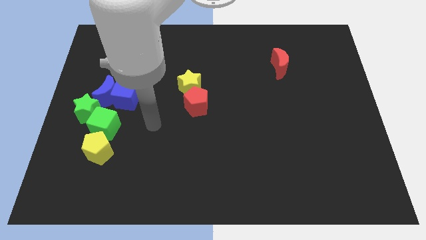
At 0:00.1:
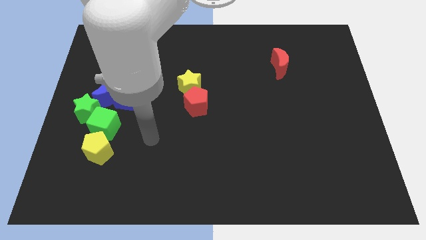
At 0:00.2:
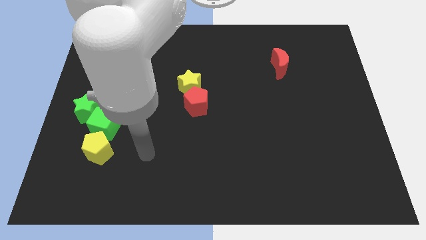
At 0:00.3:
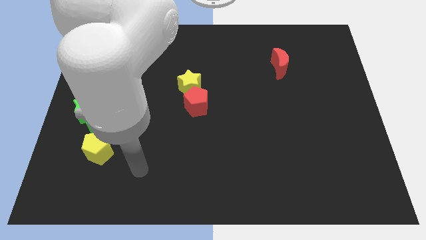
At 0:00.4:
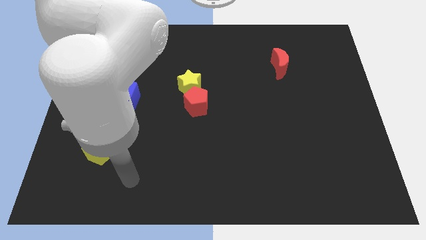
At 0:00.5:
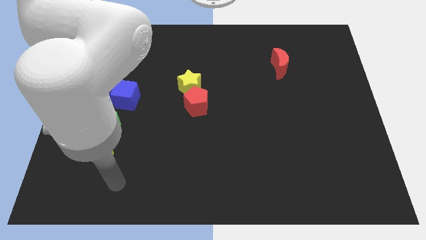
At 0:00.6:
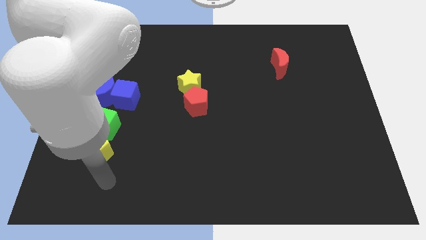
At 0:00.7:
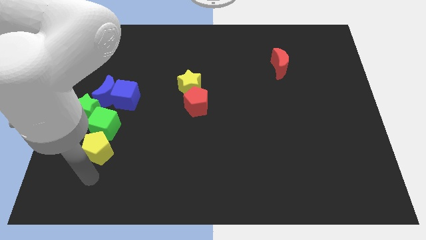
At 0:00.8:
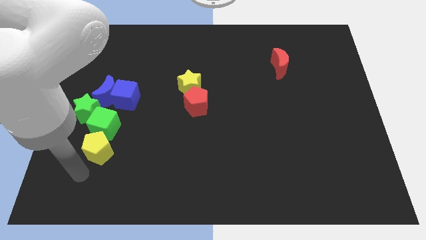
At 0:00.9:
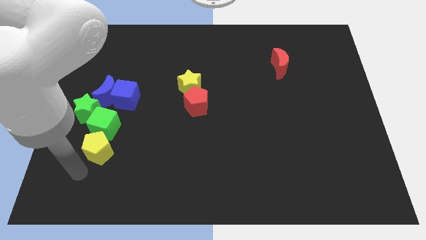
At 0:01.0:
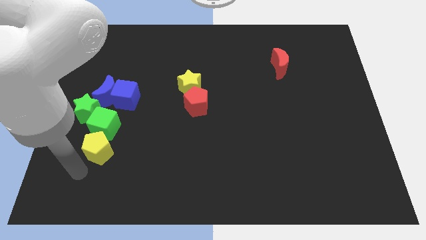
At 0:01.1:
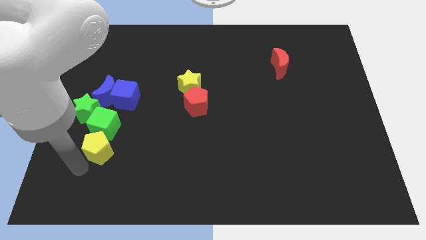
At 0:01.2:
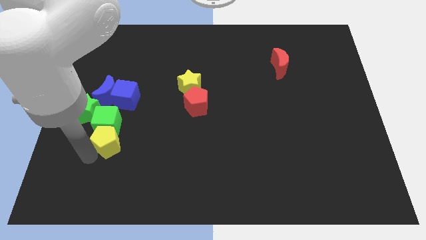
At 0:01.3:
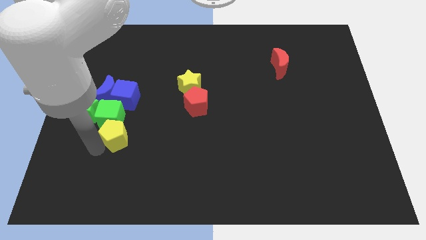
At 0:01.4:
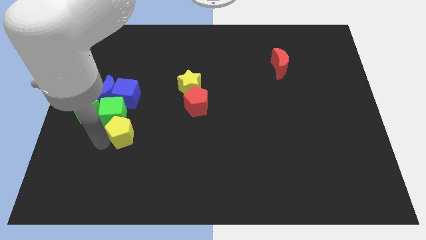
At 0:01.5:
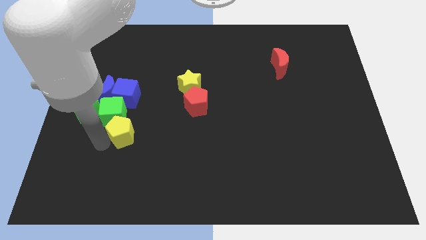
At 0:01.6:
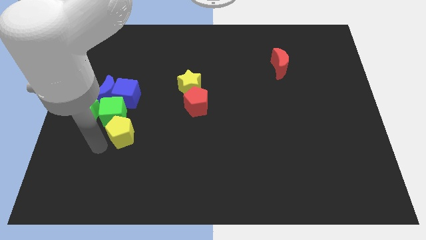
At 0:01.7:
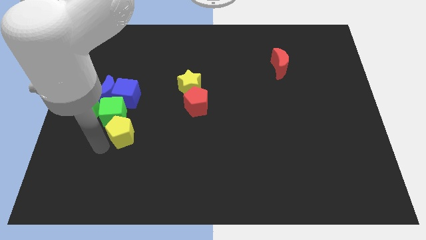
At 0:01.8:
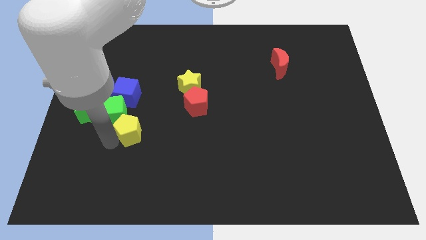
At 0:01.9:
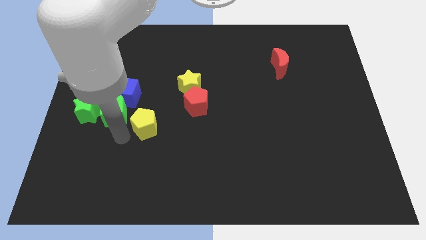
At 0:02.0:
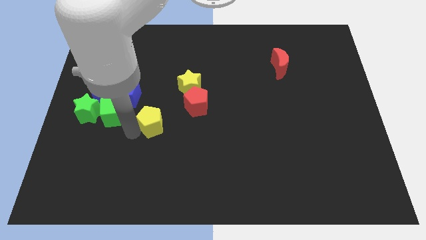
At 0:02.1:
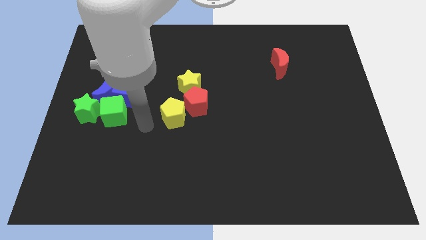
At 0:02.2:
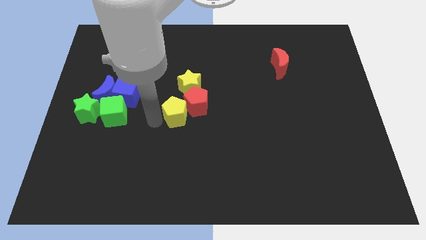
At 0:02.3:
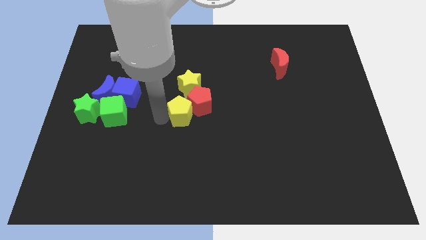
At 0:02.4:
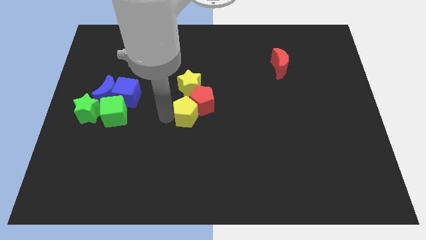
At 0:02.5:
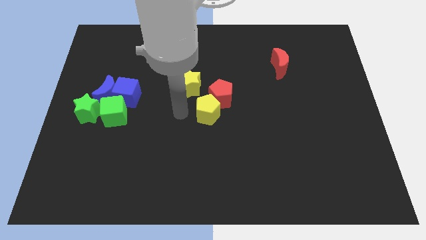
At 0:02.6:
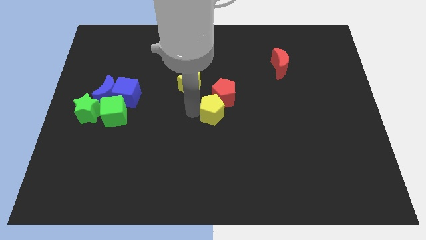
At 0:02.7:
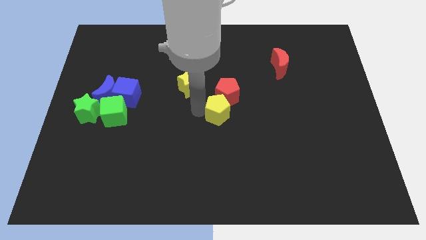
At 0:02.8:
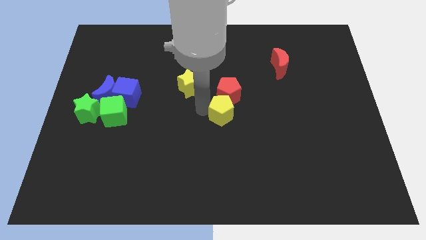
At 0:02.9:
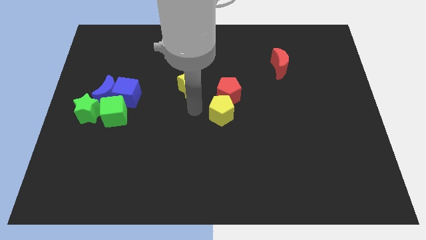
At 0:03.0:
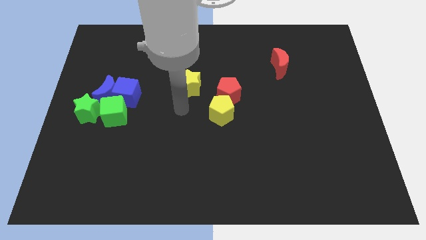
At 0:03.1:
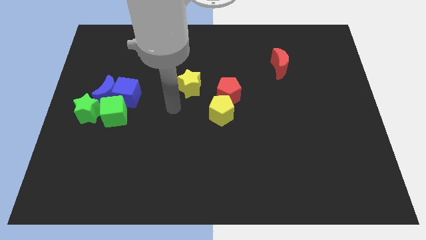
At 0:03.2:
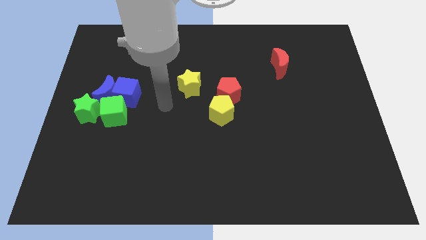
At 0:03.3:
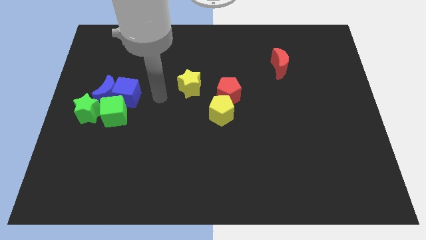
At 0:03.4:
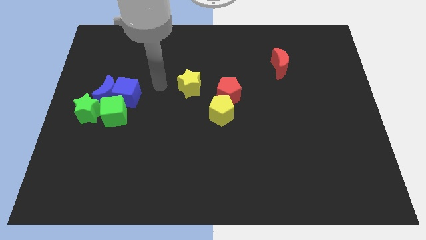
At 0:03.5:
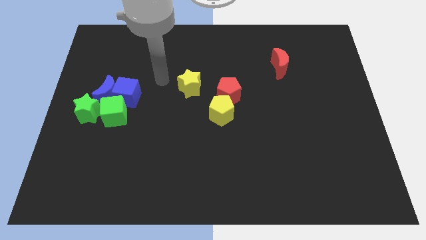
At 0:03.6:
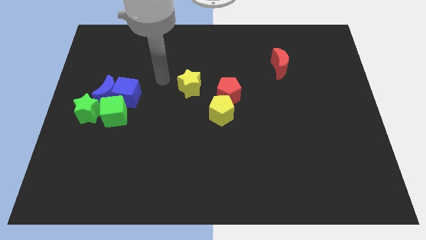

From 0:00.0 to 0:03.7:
slide yellow pentagon to the bottom left side of the red pentagon

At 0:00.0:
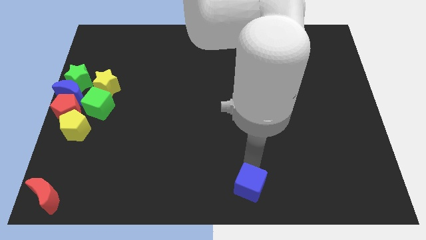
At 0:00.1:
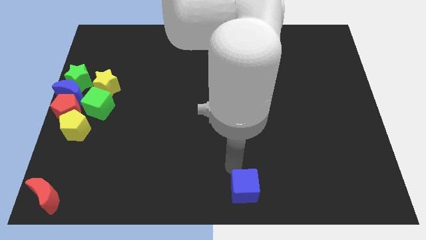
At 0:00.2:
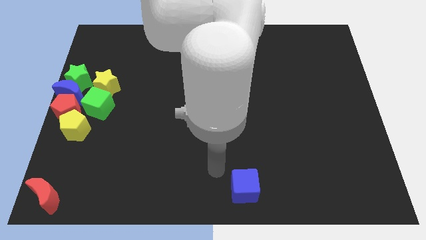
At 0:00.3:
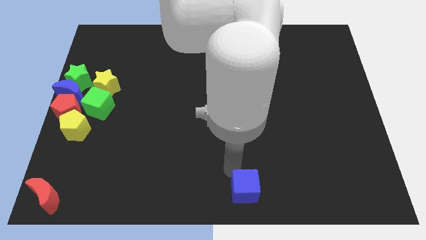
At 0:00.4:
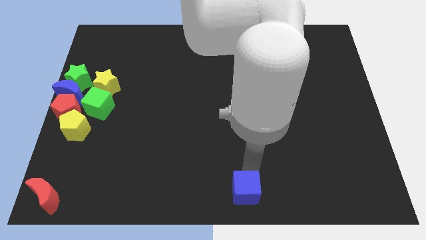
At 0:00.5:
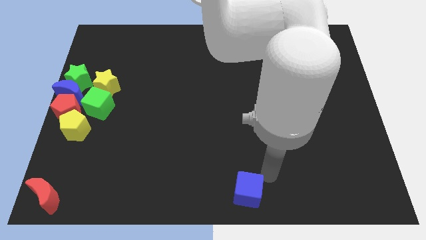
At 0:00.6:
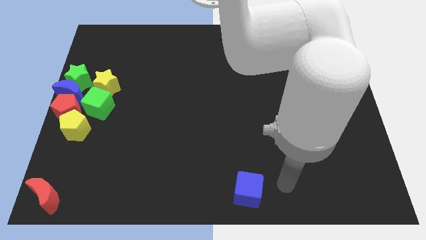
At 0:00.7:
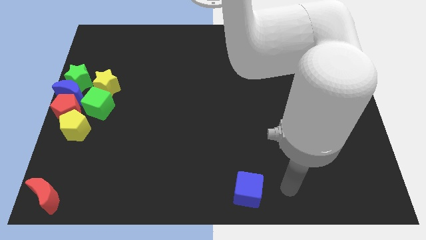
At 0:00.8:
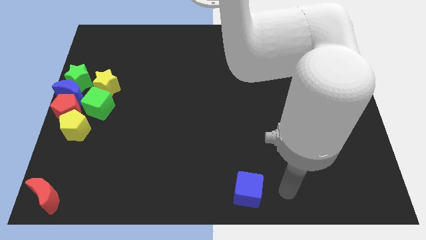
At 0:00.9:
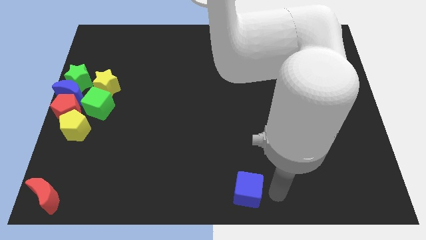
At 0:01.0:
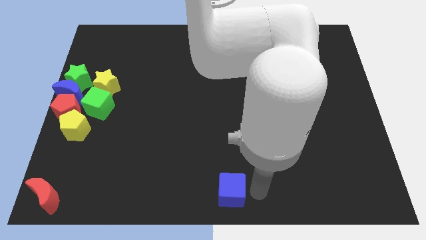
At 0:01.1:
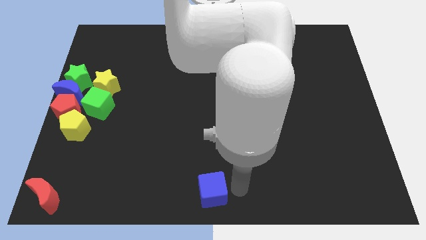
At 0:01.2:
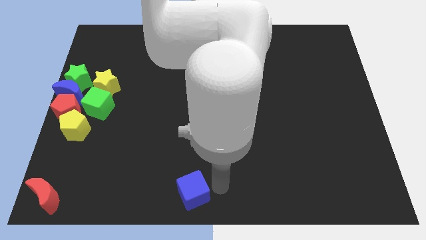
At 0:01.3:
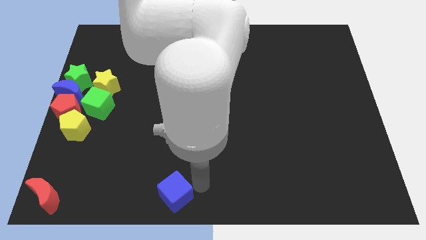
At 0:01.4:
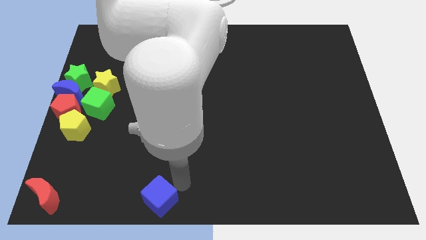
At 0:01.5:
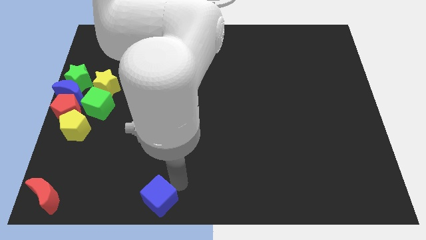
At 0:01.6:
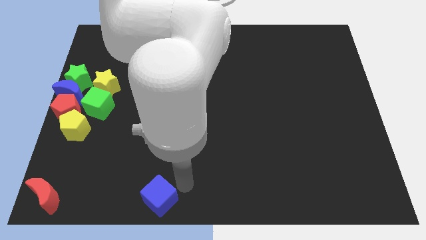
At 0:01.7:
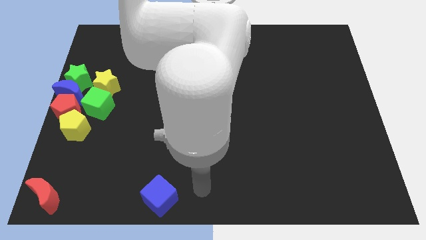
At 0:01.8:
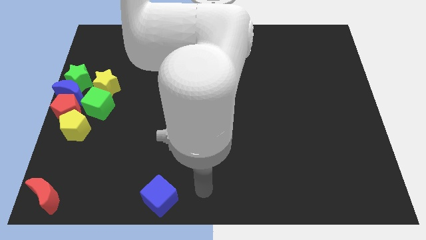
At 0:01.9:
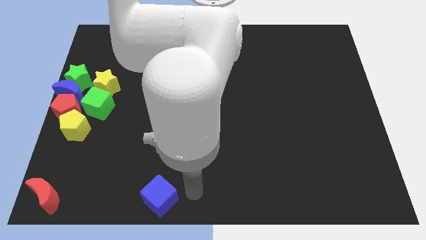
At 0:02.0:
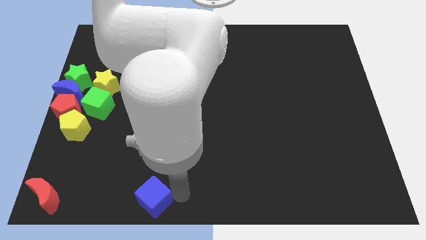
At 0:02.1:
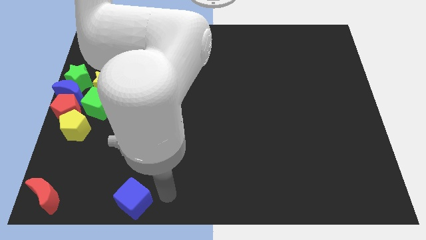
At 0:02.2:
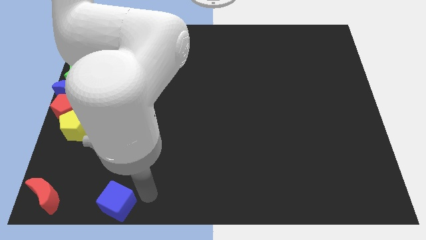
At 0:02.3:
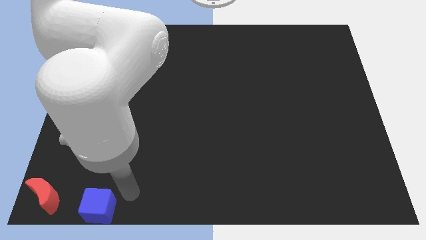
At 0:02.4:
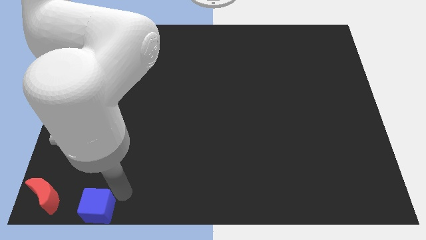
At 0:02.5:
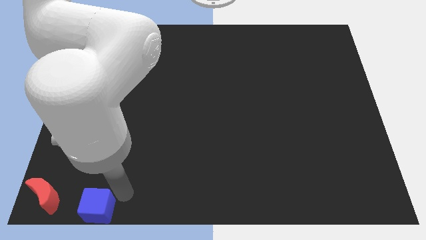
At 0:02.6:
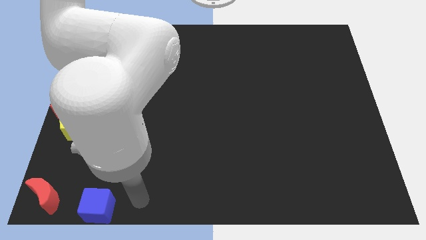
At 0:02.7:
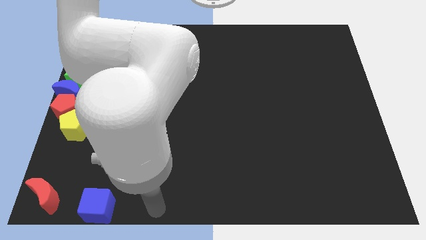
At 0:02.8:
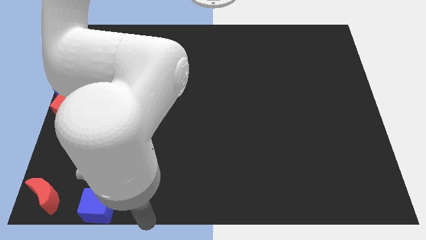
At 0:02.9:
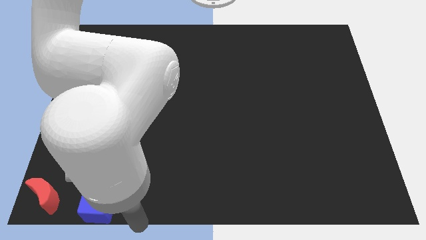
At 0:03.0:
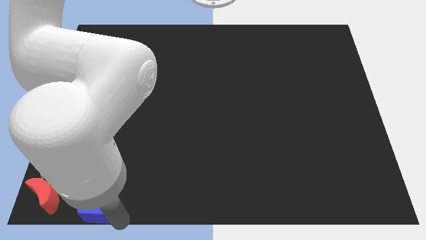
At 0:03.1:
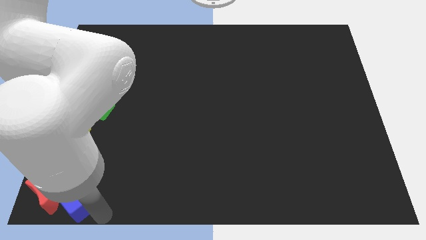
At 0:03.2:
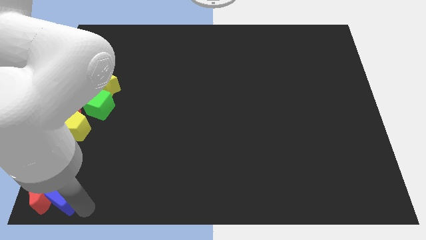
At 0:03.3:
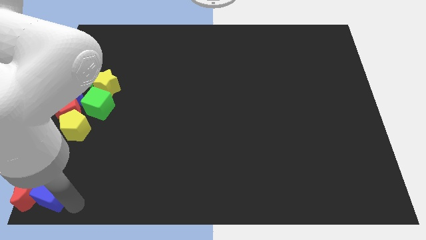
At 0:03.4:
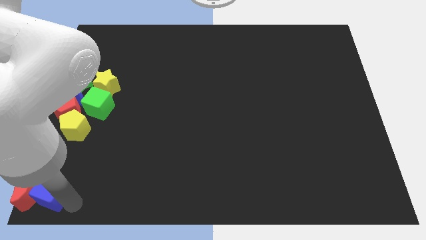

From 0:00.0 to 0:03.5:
push the blue cube into the red crescent from the right side

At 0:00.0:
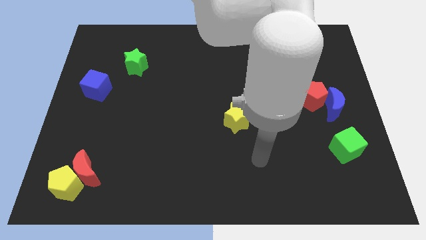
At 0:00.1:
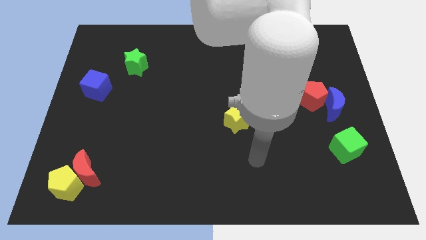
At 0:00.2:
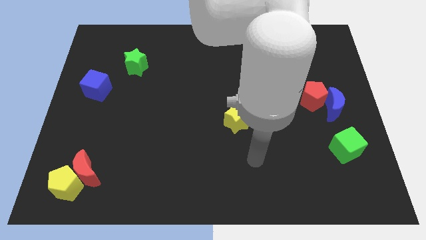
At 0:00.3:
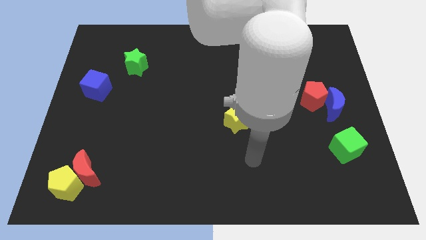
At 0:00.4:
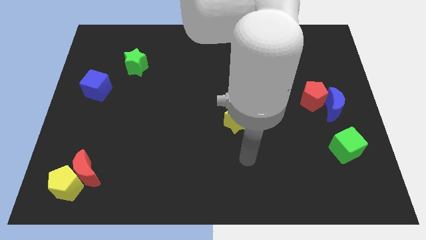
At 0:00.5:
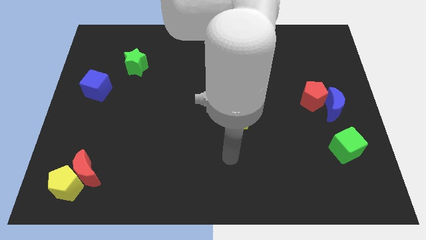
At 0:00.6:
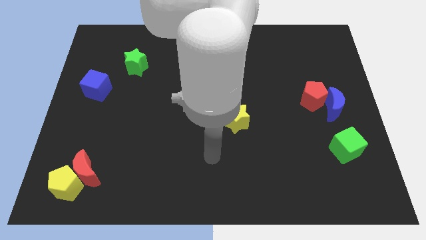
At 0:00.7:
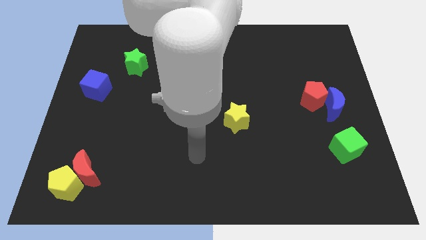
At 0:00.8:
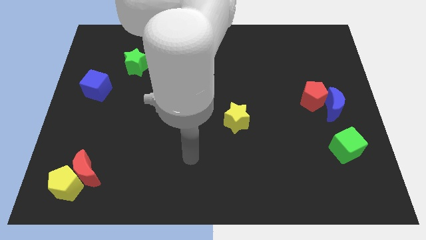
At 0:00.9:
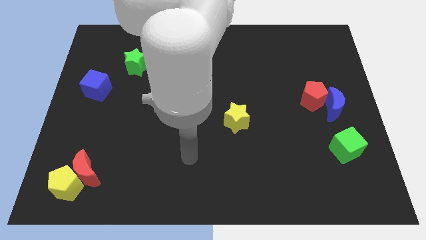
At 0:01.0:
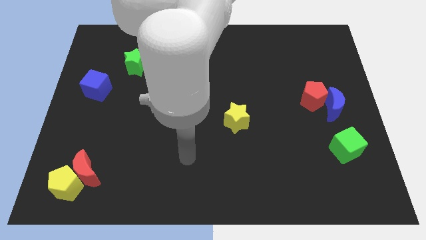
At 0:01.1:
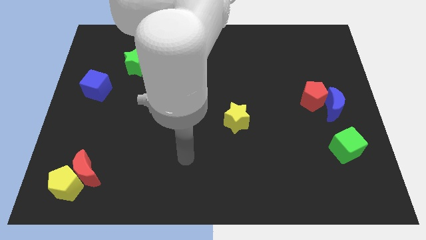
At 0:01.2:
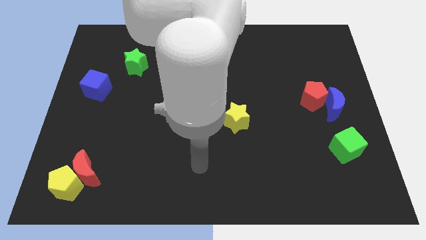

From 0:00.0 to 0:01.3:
place your arm to the bottom left of the yellow star

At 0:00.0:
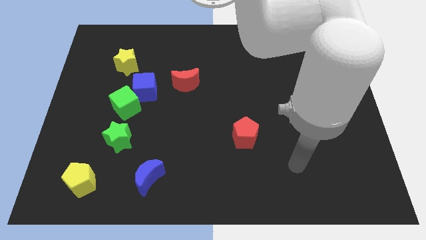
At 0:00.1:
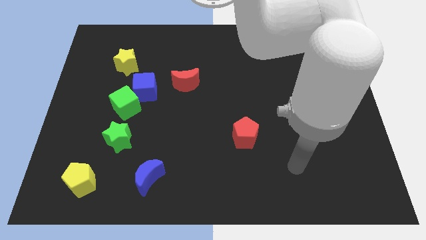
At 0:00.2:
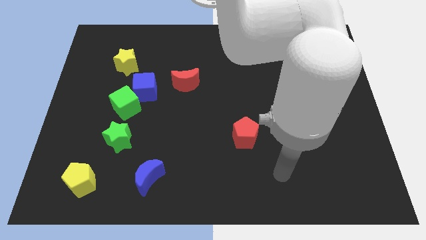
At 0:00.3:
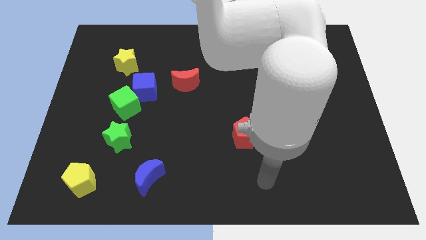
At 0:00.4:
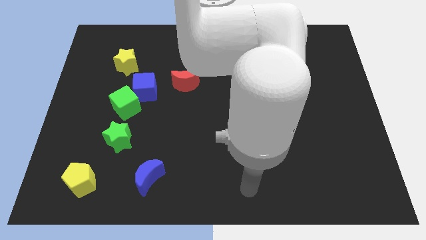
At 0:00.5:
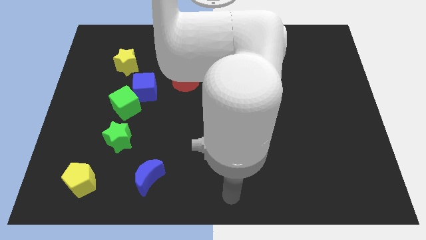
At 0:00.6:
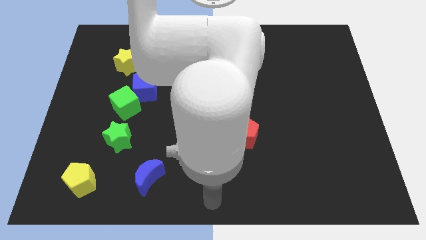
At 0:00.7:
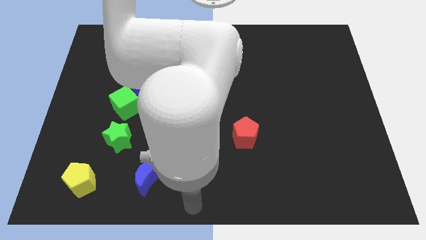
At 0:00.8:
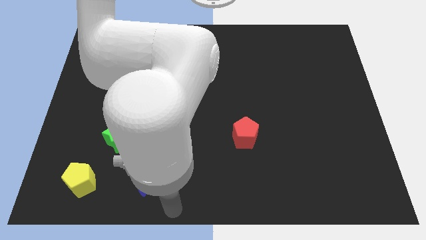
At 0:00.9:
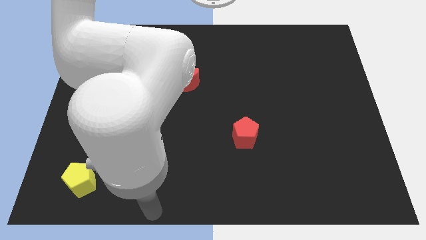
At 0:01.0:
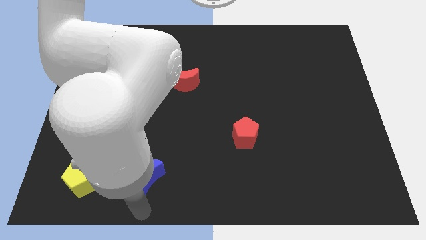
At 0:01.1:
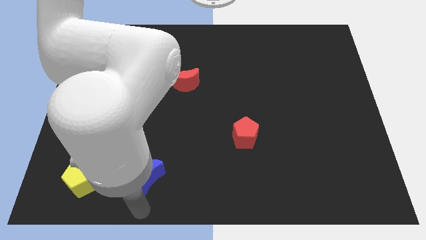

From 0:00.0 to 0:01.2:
point the arm at the bottom side of the blue crescent
